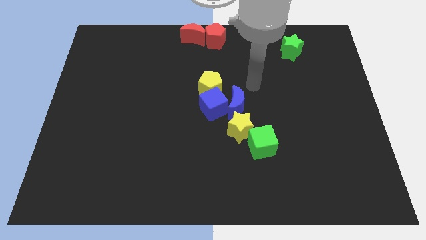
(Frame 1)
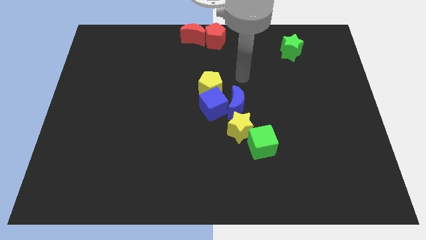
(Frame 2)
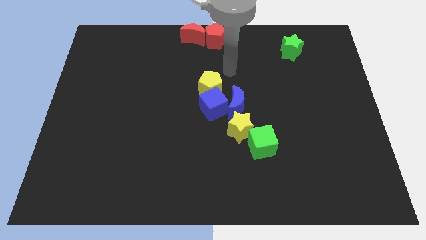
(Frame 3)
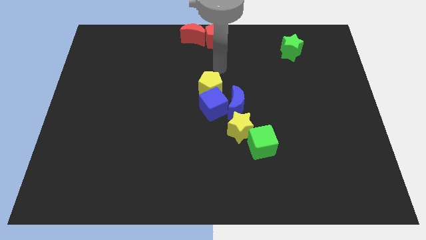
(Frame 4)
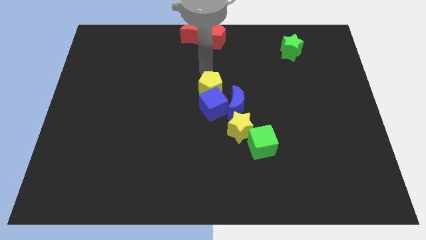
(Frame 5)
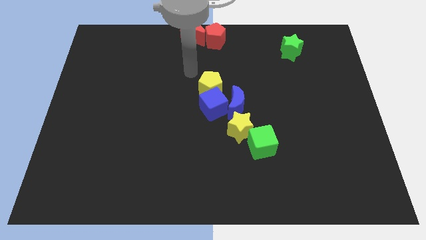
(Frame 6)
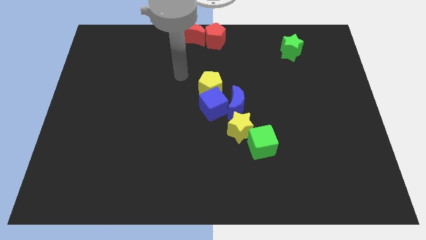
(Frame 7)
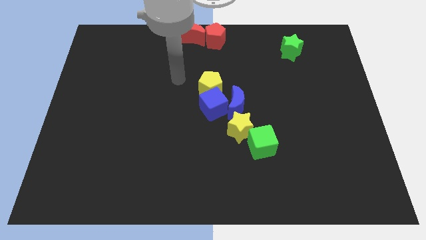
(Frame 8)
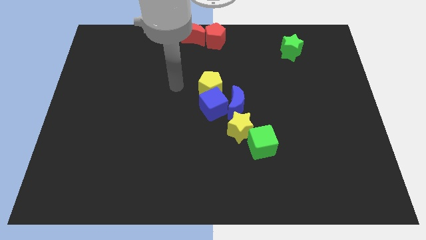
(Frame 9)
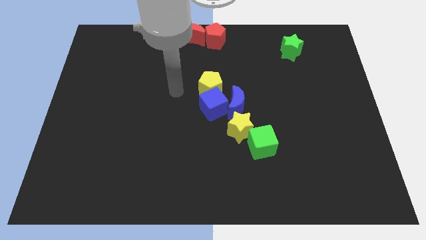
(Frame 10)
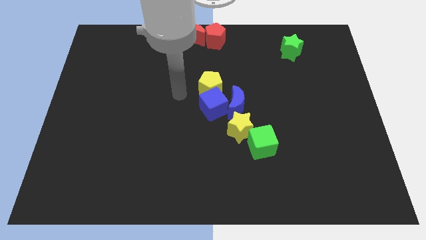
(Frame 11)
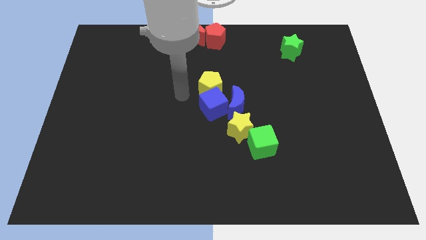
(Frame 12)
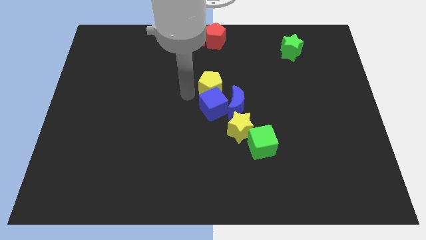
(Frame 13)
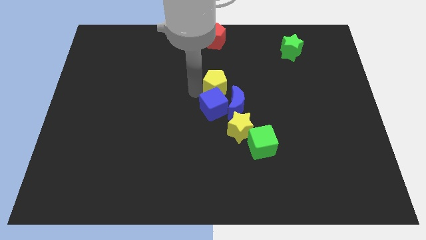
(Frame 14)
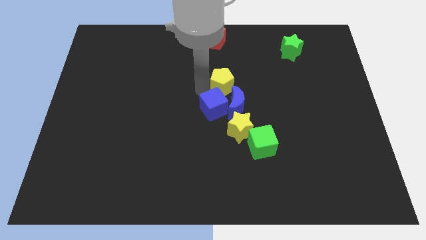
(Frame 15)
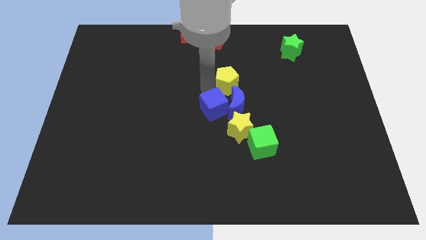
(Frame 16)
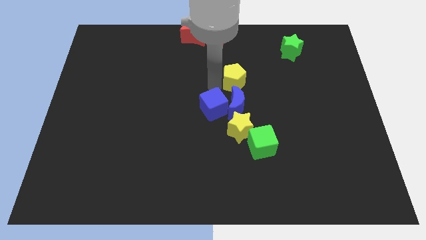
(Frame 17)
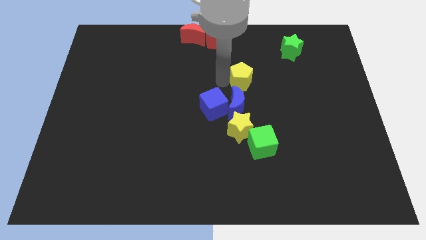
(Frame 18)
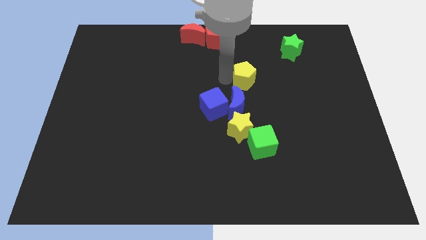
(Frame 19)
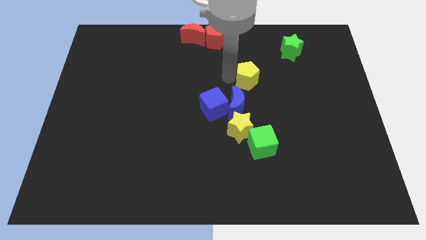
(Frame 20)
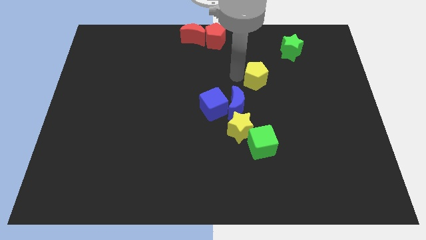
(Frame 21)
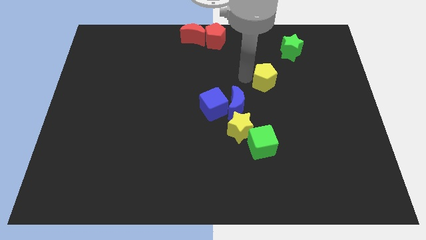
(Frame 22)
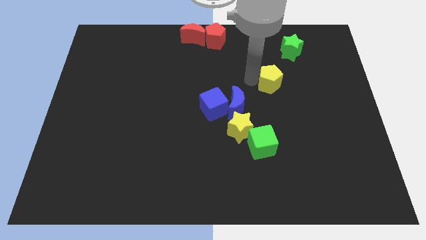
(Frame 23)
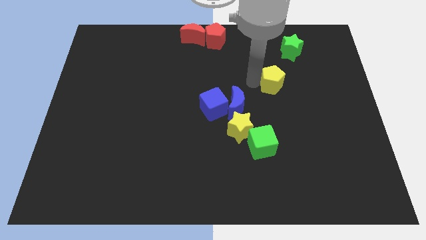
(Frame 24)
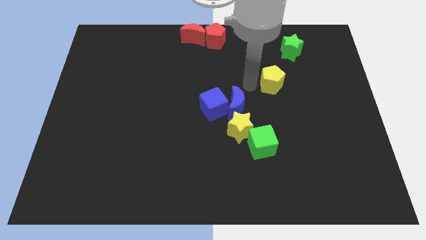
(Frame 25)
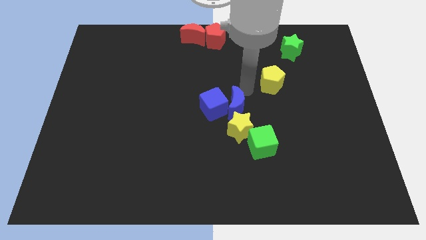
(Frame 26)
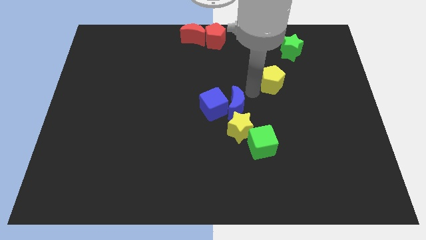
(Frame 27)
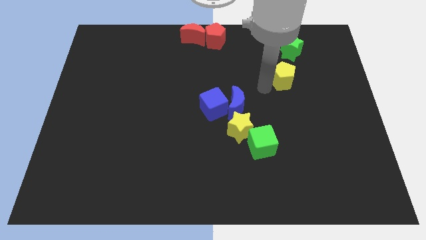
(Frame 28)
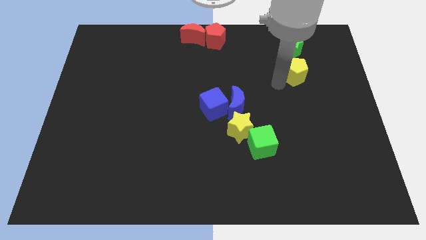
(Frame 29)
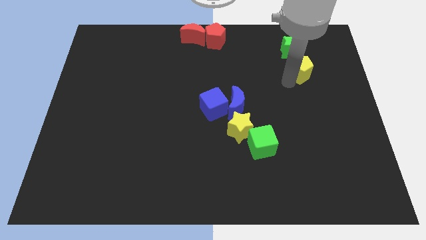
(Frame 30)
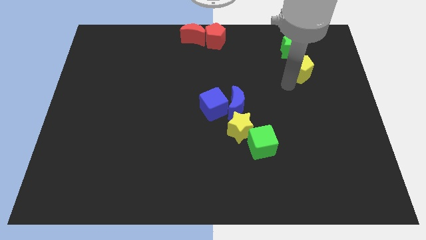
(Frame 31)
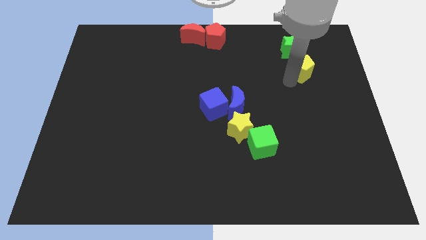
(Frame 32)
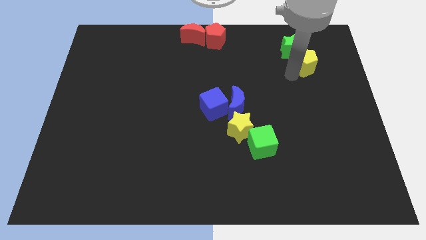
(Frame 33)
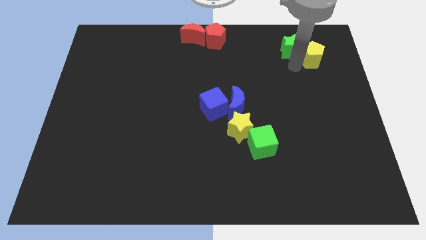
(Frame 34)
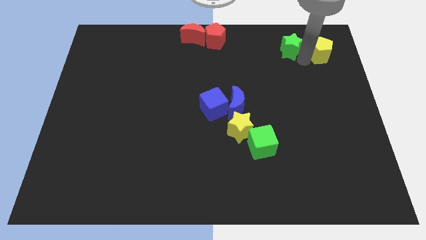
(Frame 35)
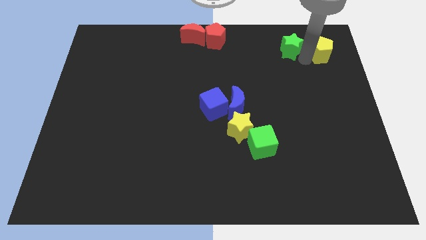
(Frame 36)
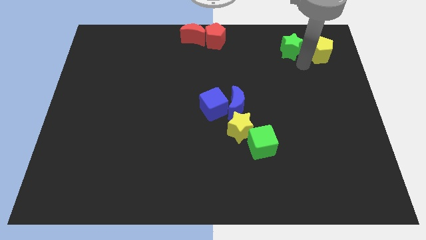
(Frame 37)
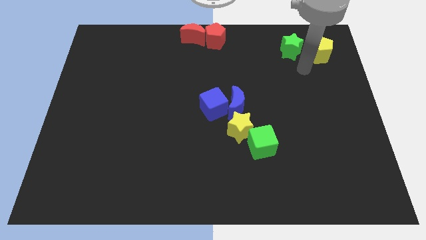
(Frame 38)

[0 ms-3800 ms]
place the yellow pentagon to the right of the green star

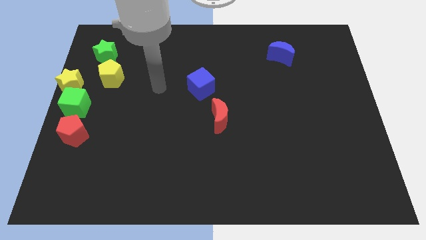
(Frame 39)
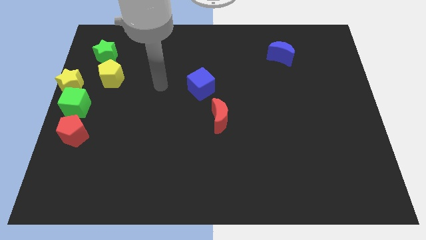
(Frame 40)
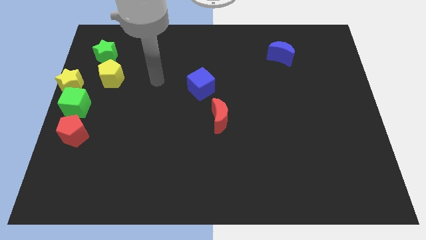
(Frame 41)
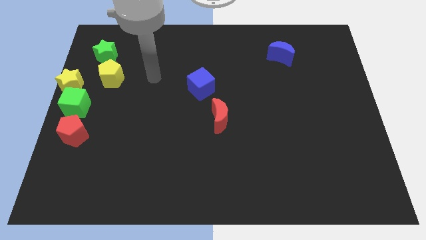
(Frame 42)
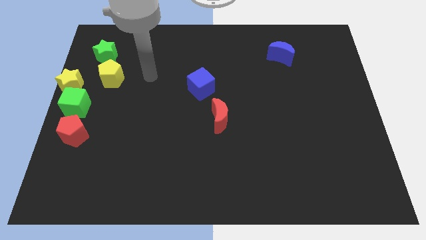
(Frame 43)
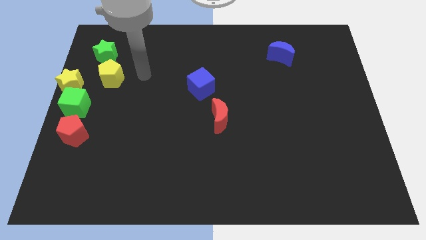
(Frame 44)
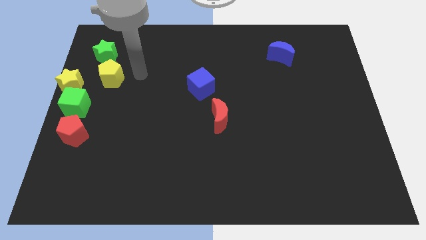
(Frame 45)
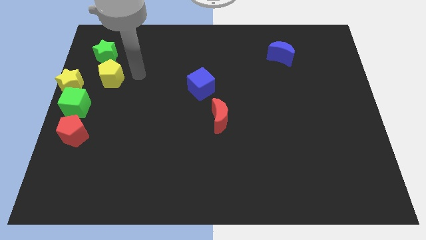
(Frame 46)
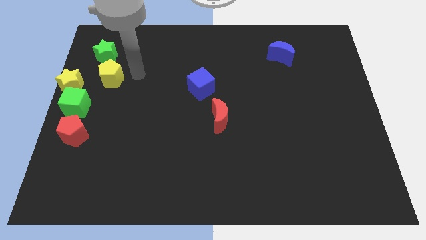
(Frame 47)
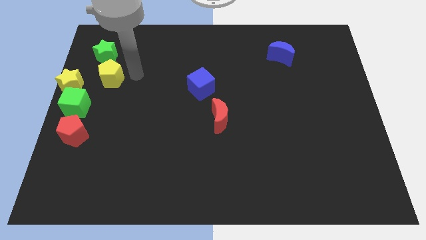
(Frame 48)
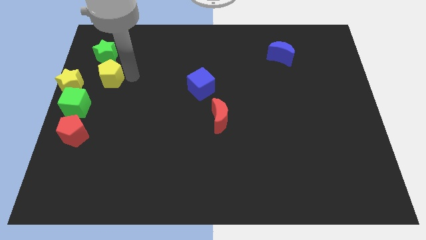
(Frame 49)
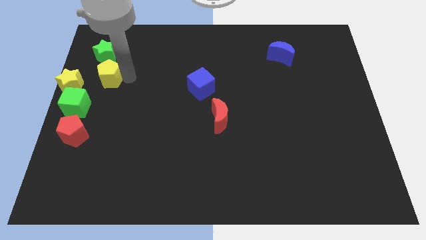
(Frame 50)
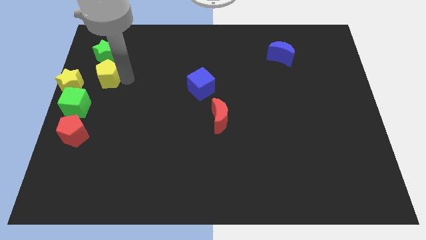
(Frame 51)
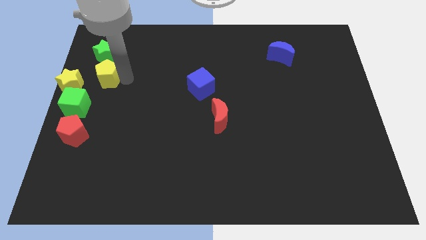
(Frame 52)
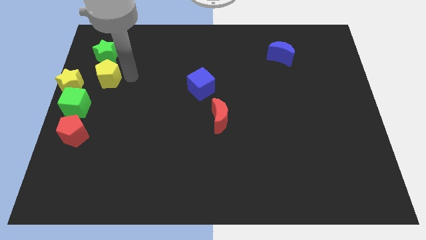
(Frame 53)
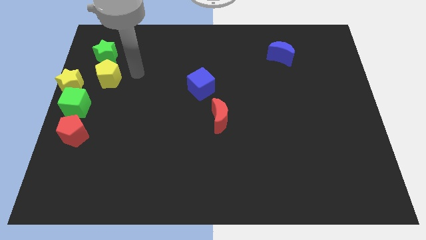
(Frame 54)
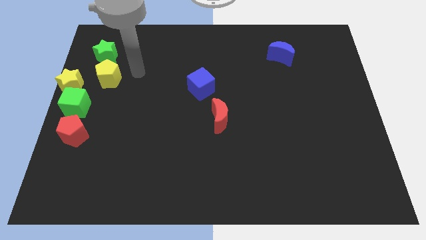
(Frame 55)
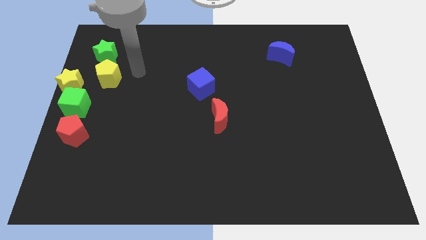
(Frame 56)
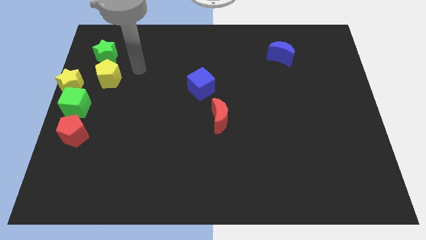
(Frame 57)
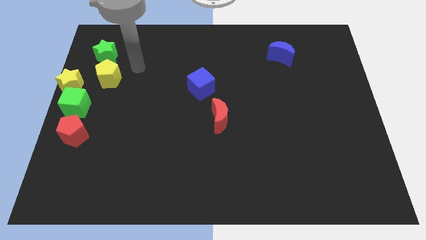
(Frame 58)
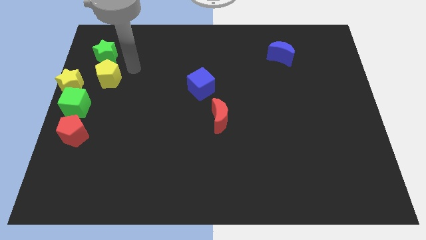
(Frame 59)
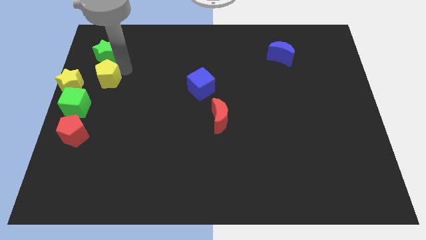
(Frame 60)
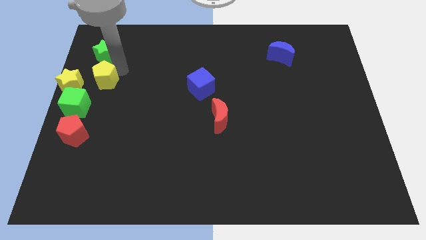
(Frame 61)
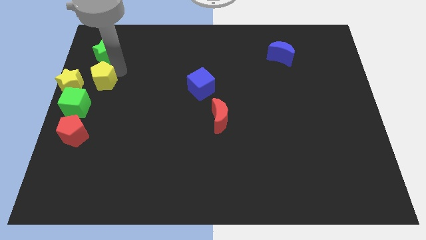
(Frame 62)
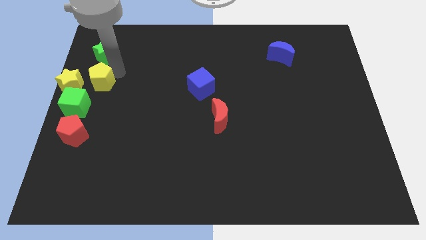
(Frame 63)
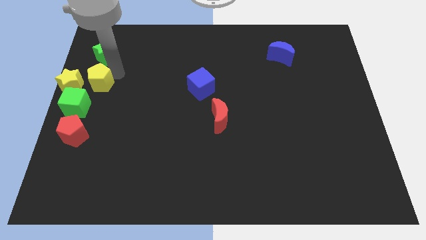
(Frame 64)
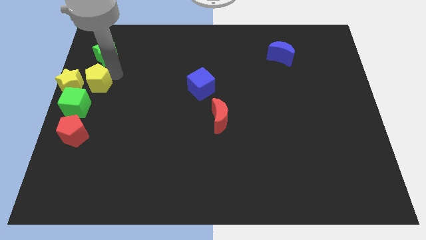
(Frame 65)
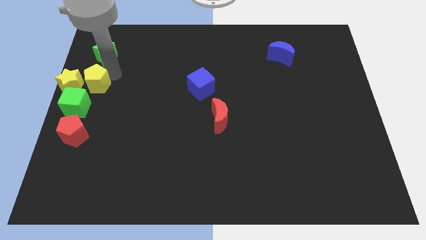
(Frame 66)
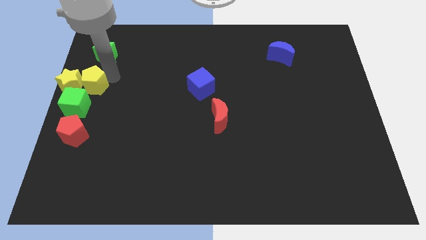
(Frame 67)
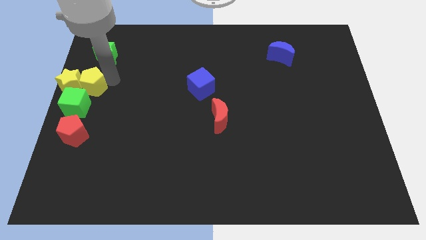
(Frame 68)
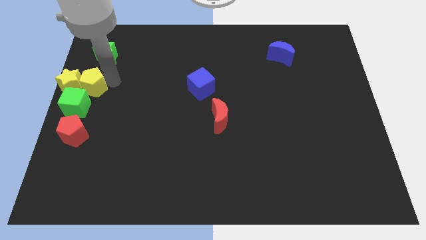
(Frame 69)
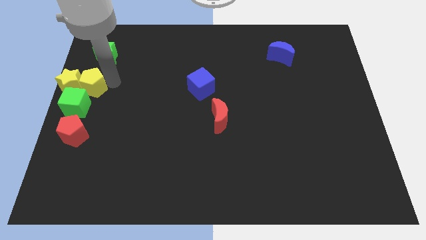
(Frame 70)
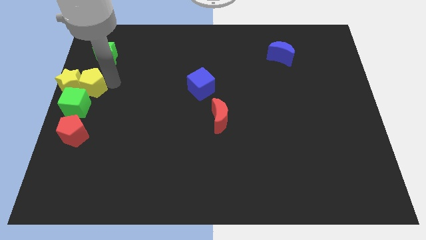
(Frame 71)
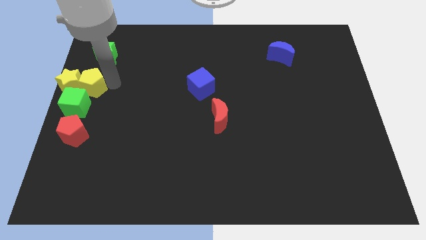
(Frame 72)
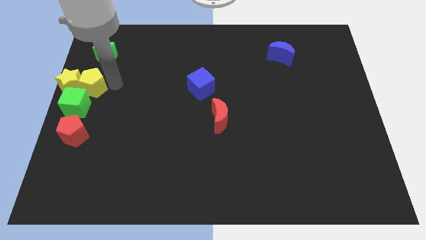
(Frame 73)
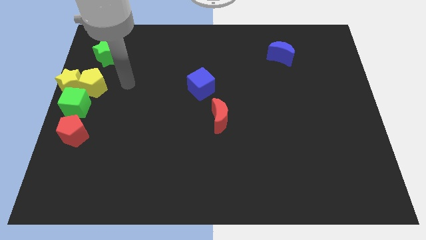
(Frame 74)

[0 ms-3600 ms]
move yellow pentagon beside yellow star

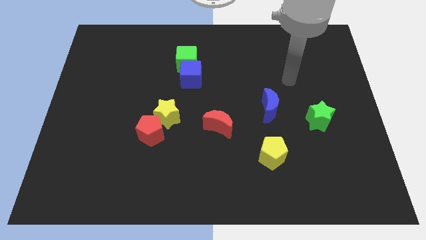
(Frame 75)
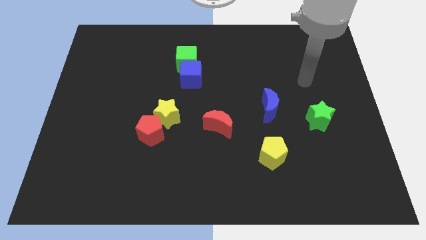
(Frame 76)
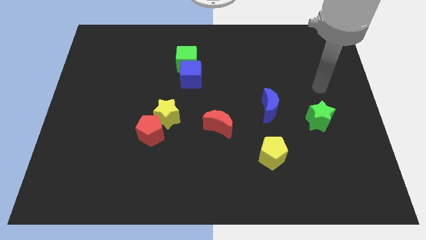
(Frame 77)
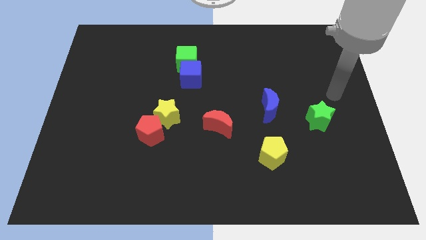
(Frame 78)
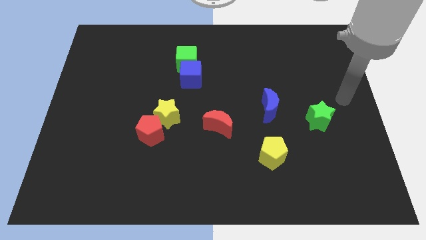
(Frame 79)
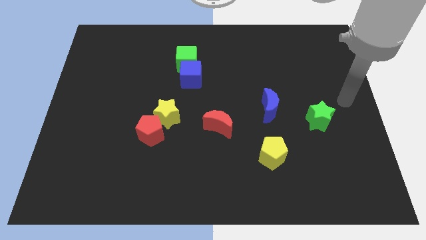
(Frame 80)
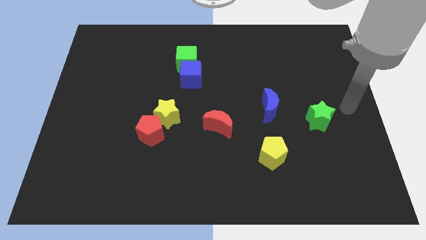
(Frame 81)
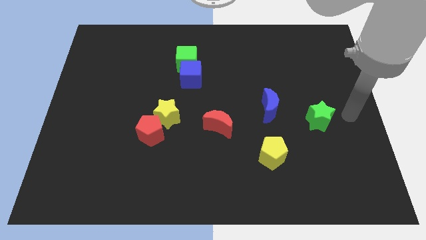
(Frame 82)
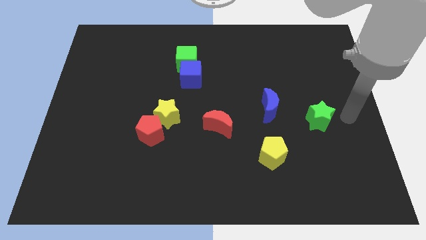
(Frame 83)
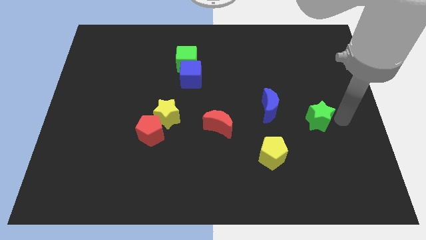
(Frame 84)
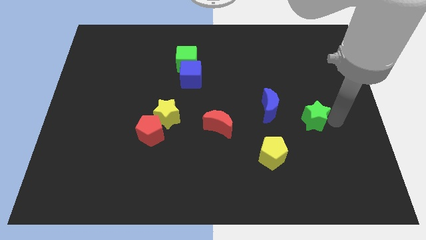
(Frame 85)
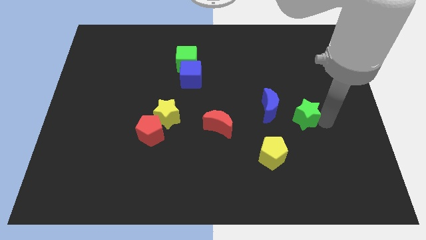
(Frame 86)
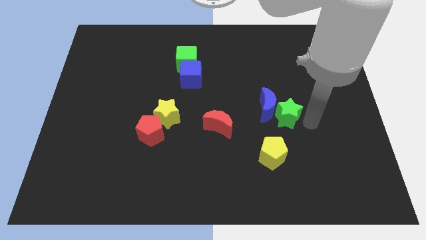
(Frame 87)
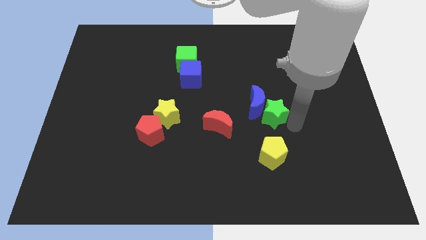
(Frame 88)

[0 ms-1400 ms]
move the green star to the right of the blue crescent

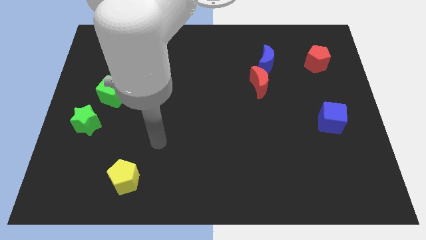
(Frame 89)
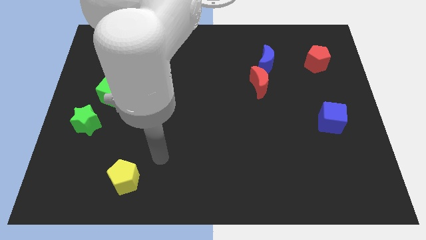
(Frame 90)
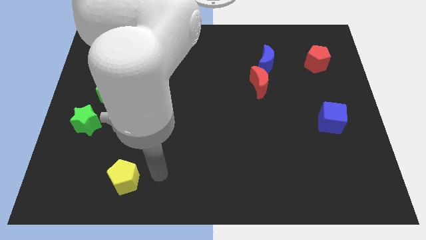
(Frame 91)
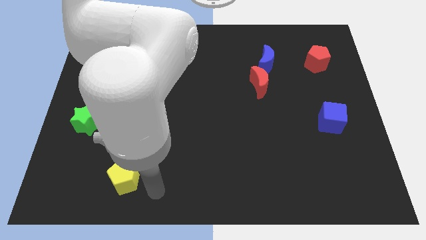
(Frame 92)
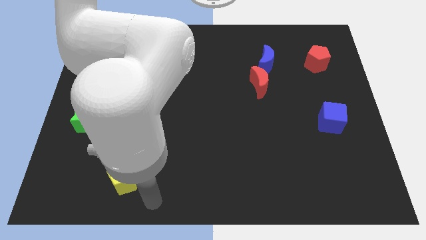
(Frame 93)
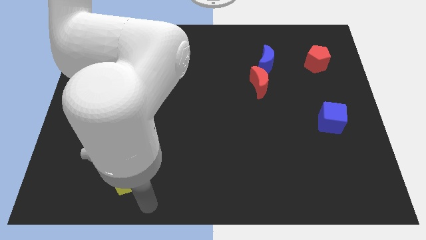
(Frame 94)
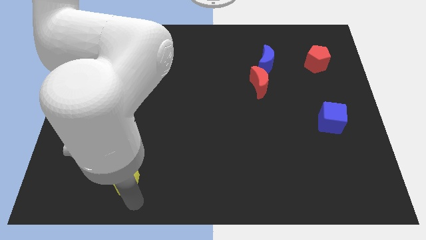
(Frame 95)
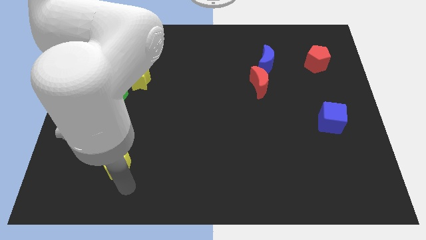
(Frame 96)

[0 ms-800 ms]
place your arm to the bottom of the yellow pentagon
